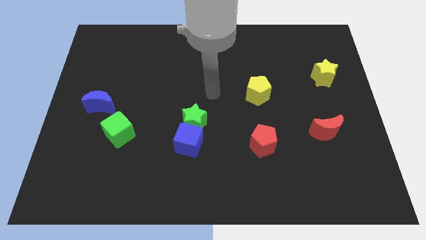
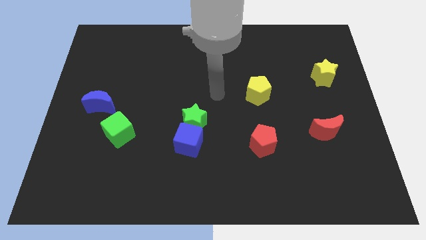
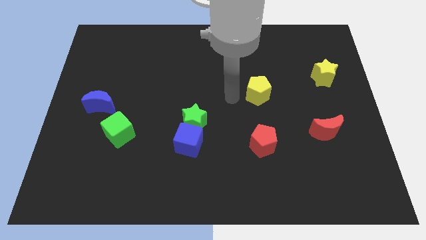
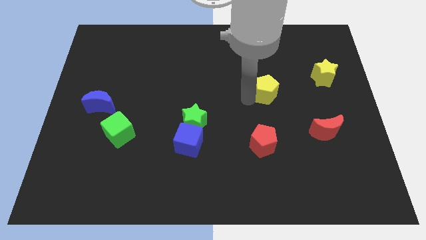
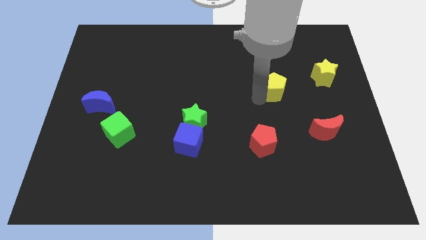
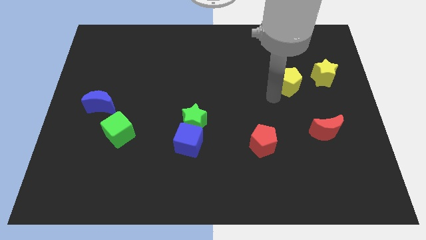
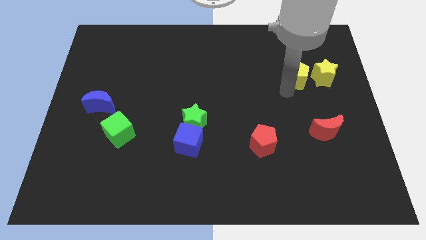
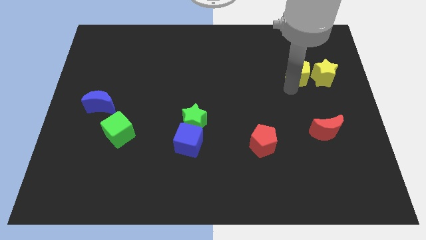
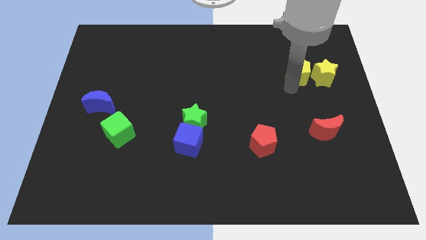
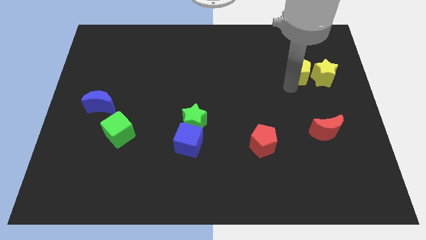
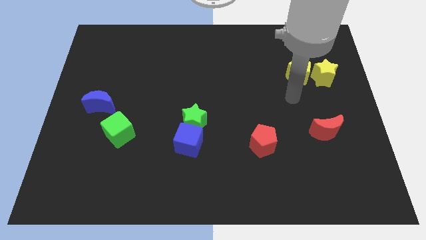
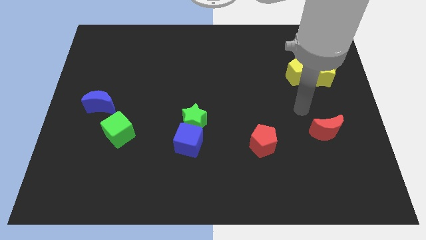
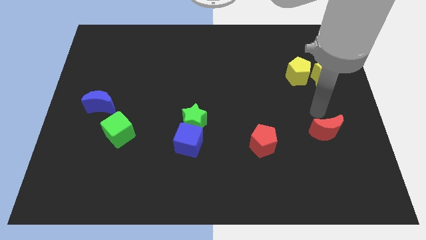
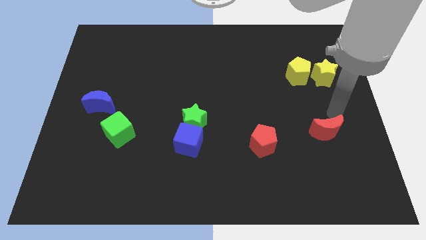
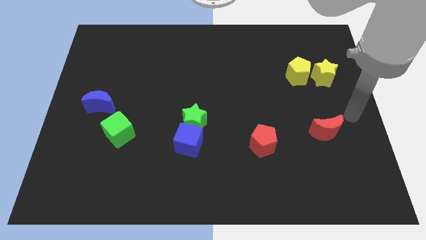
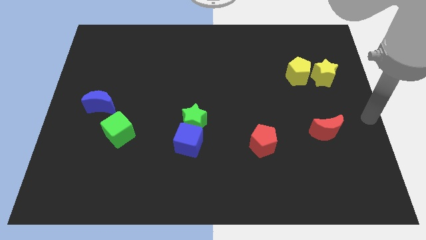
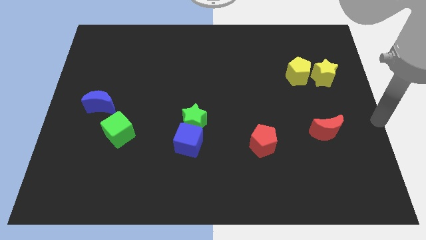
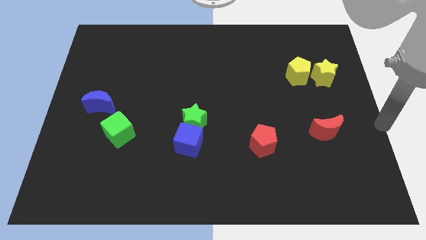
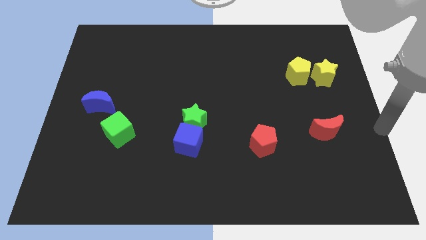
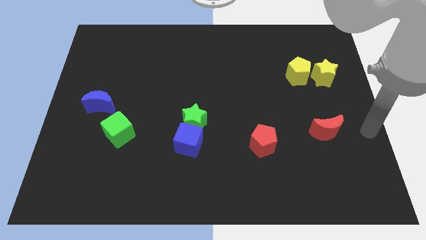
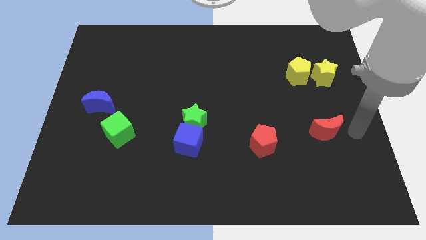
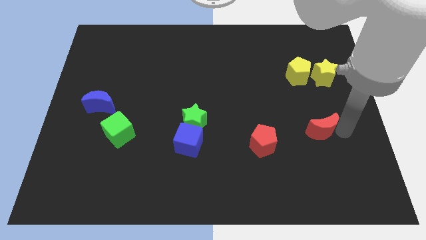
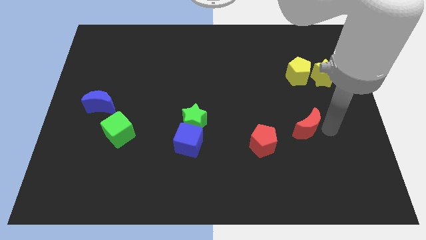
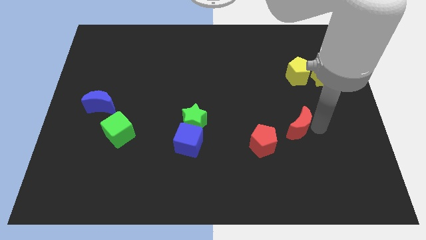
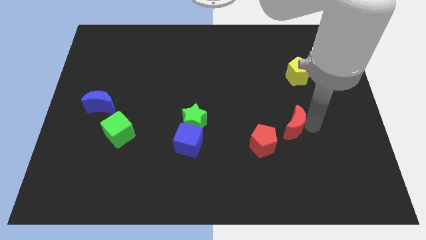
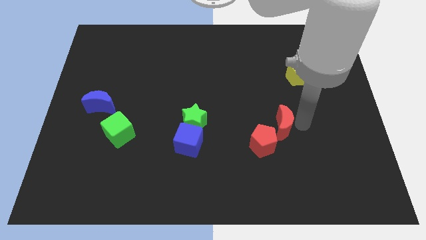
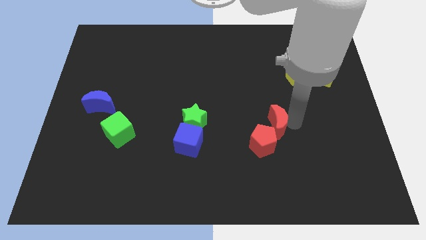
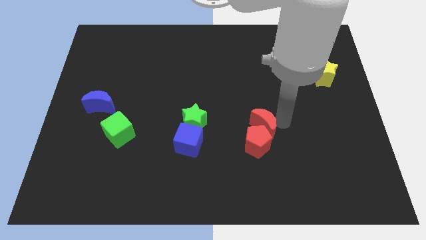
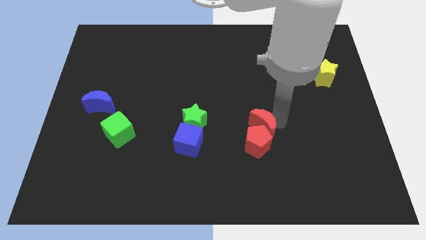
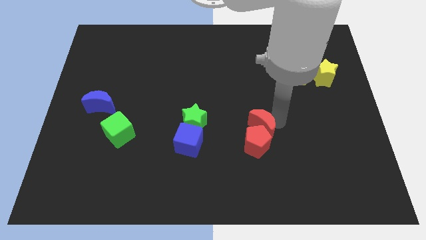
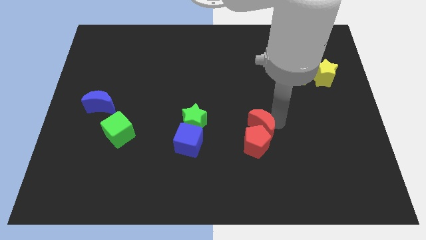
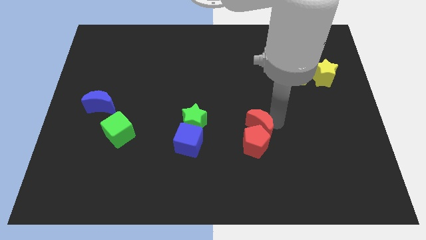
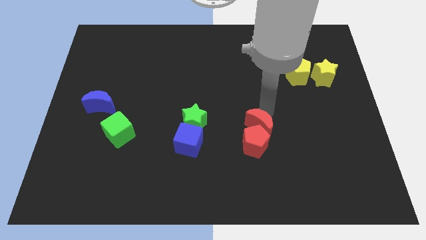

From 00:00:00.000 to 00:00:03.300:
place red crescent to the top of red pentagon

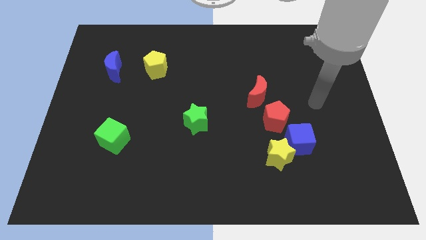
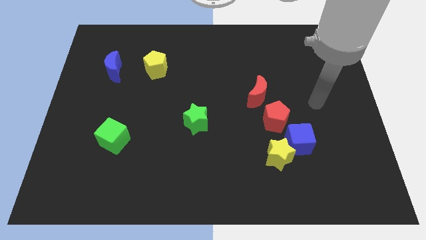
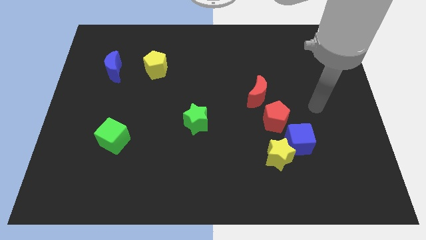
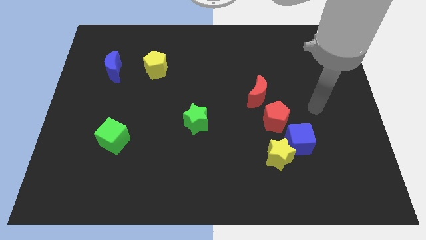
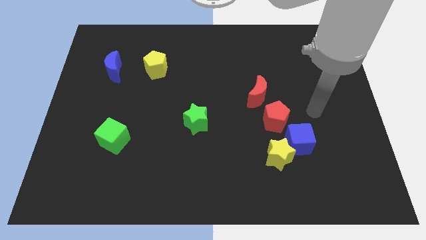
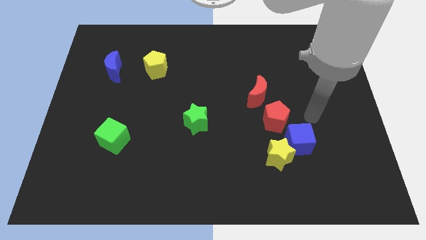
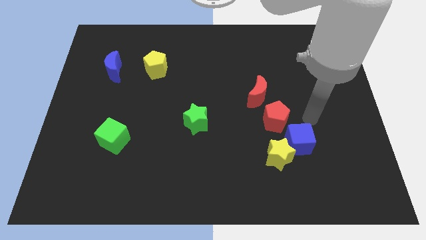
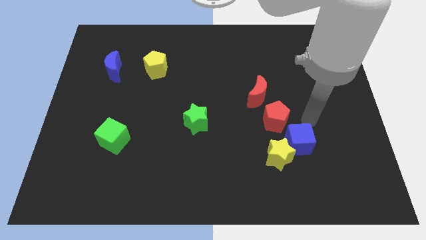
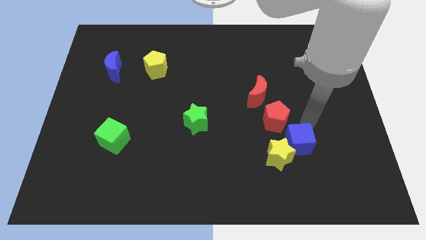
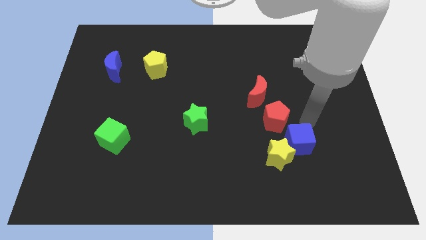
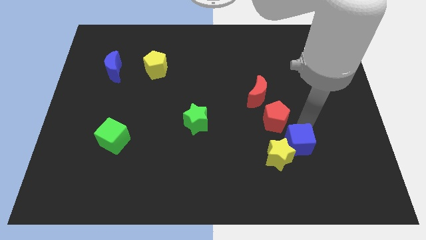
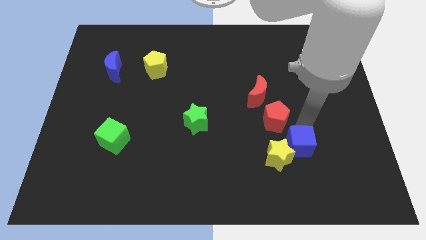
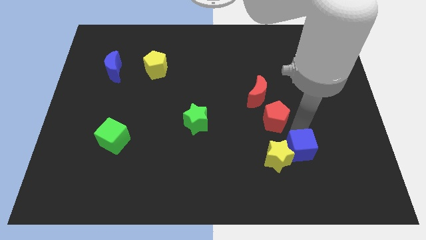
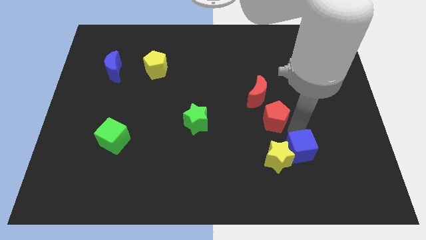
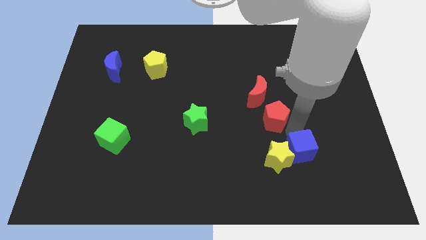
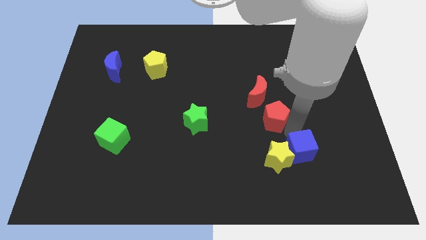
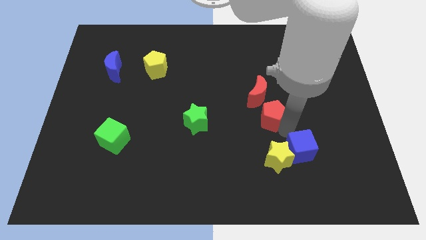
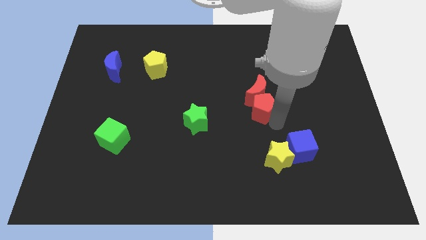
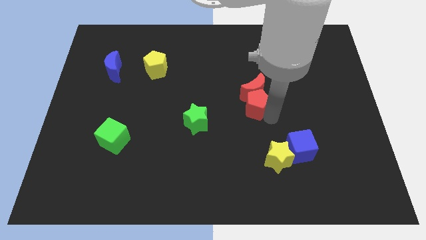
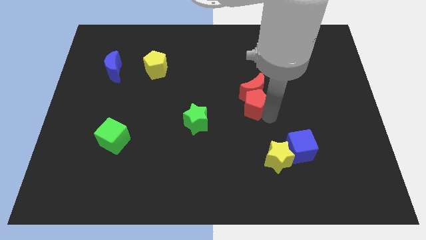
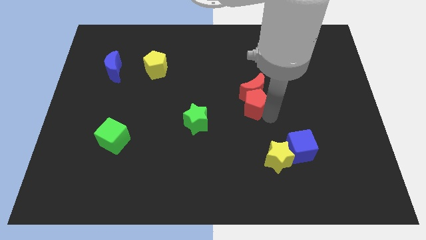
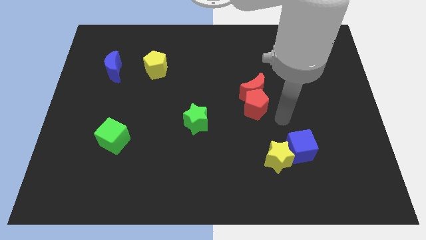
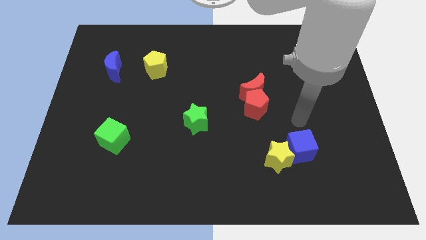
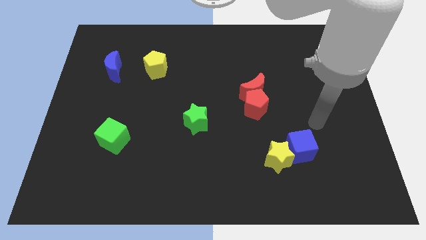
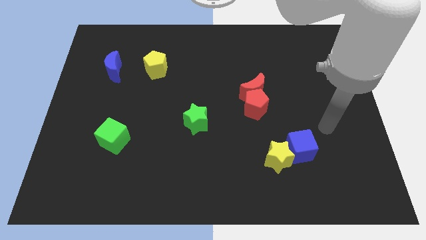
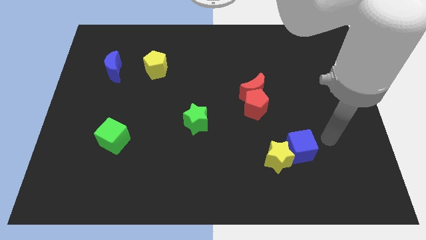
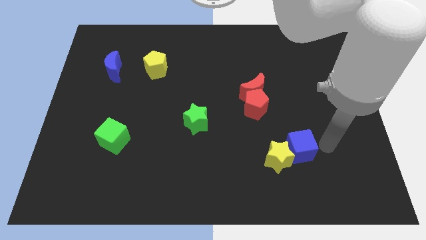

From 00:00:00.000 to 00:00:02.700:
move the red pentagon to the bottom of red crescent

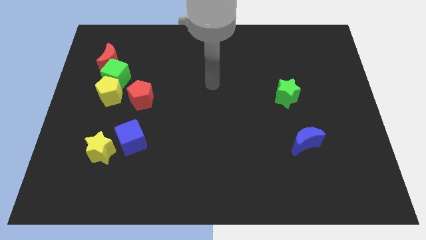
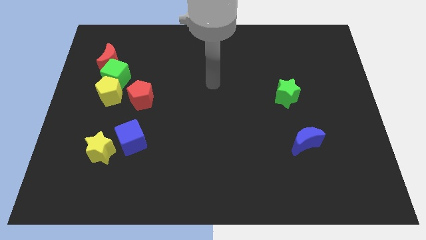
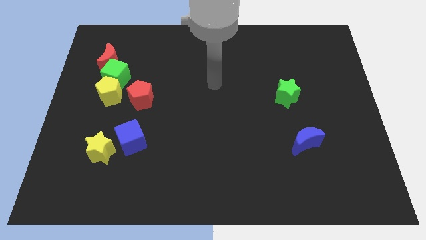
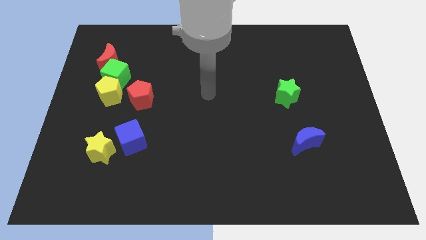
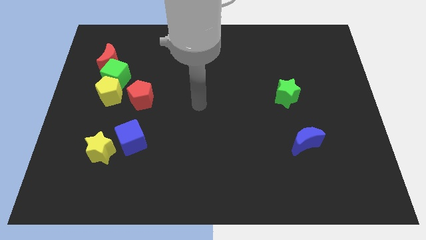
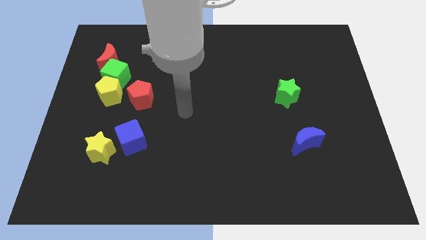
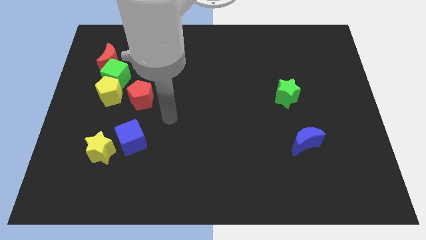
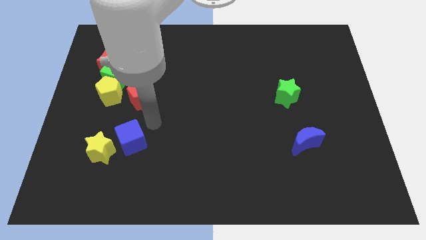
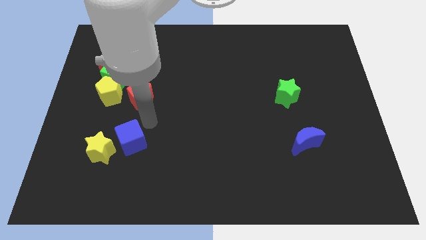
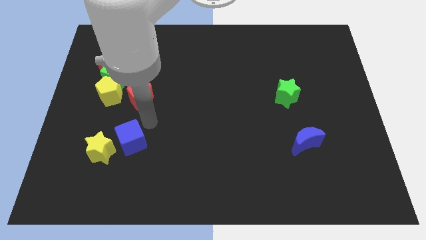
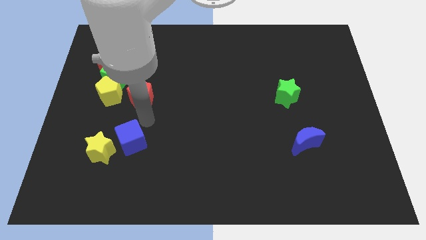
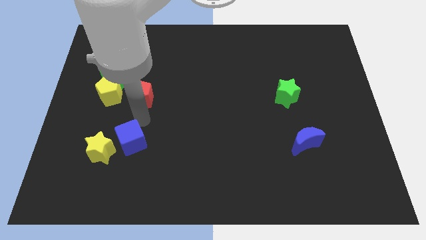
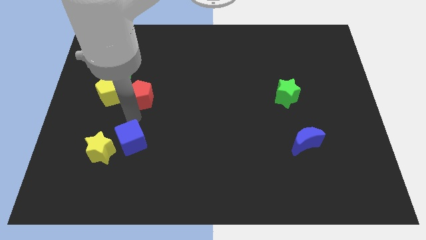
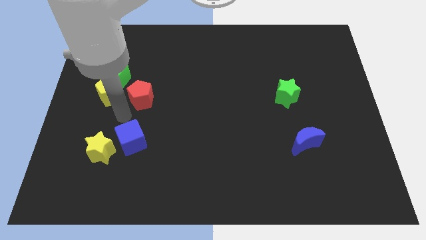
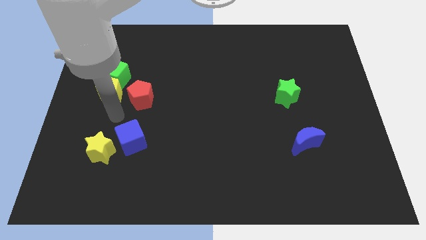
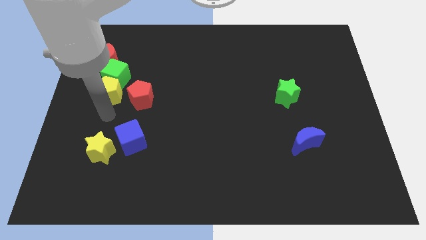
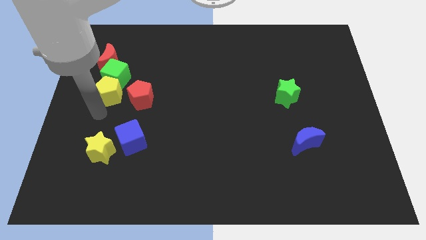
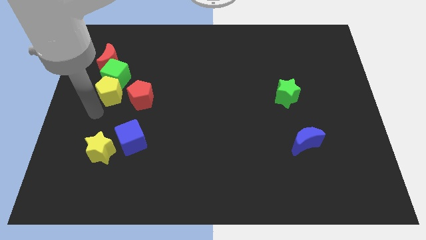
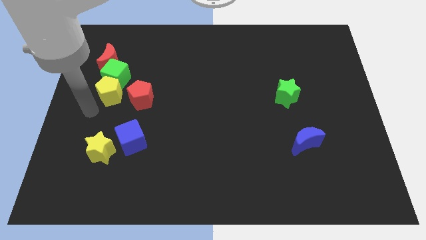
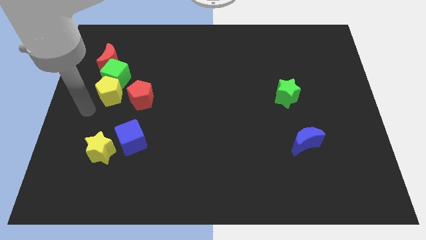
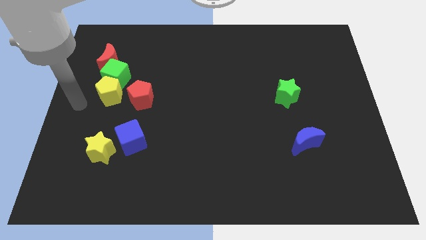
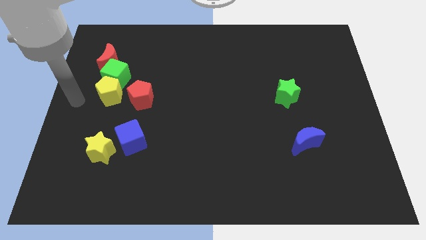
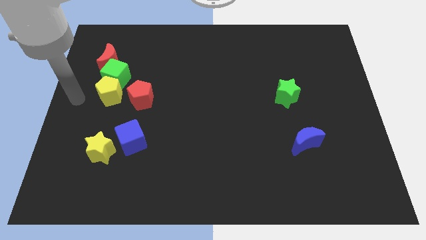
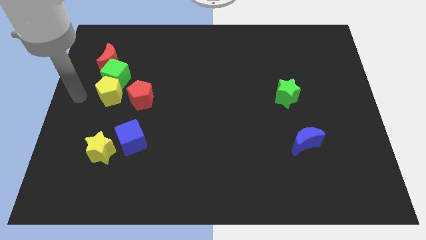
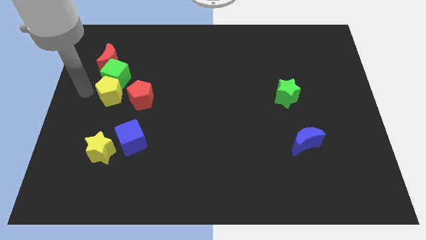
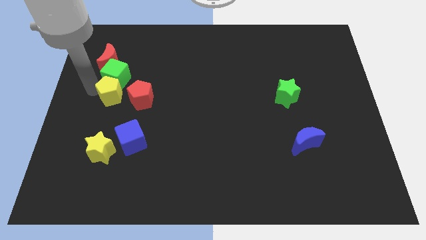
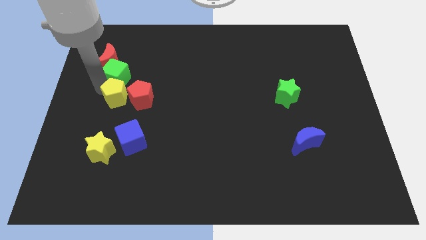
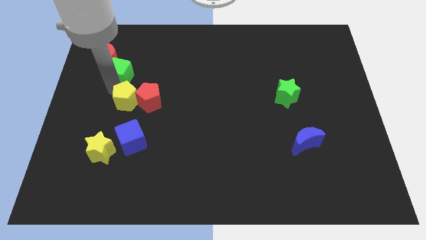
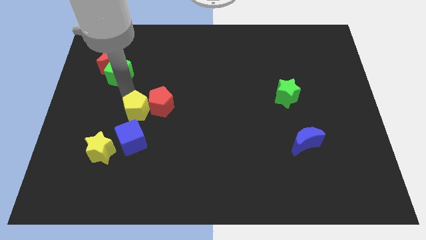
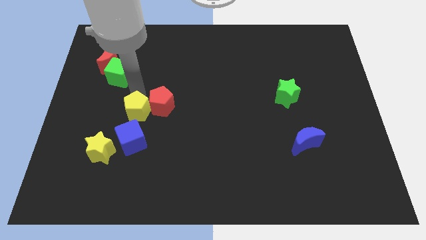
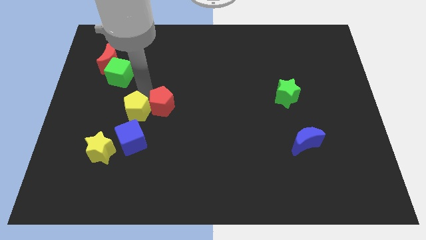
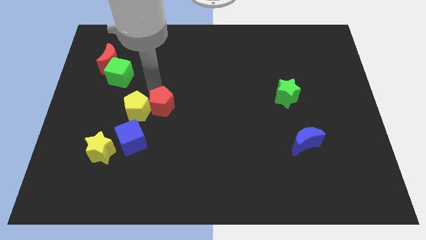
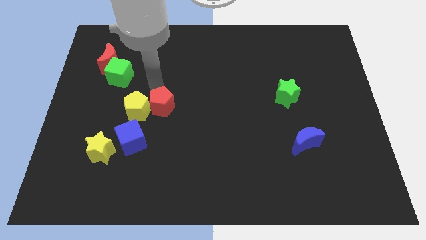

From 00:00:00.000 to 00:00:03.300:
push the yellow pentagon into the red pentagon
